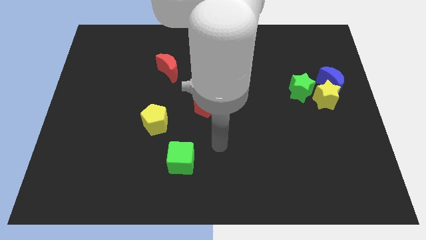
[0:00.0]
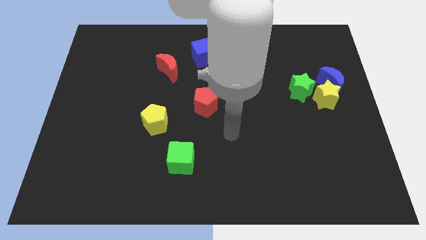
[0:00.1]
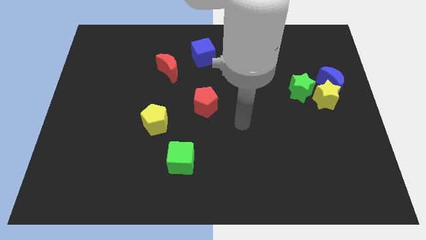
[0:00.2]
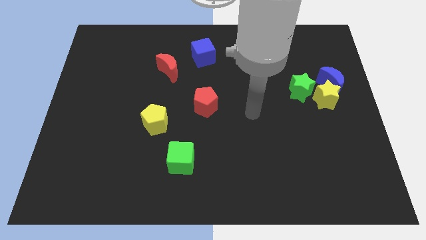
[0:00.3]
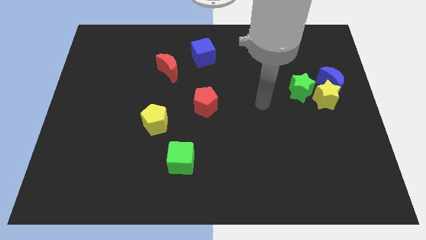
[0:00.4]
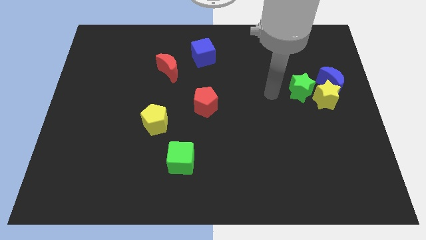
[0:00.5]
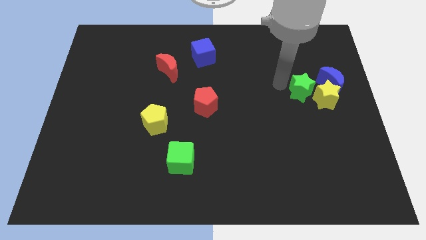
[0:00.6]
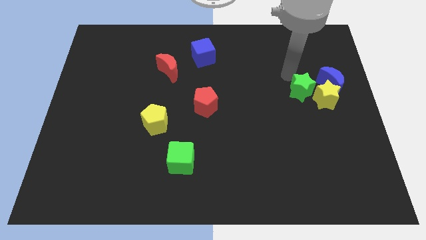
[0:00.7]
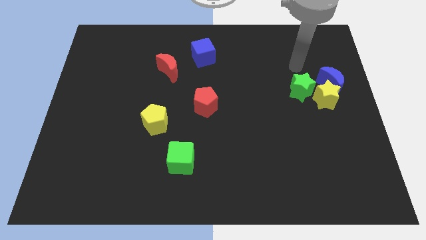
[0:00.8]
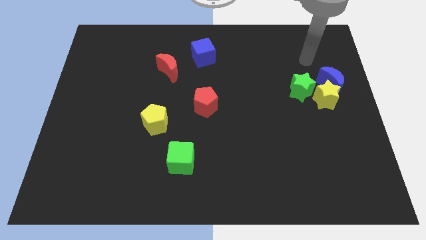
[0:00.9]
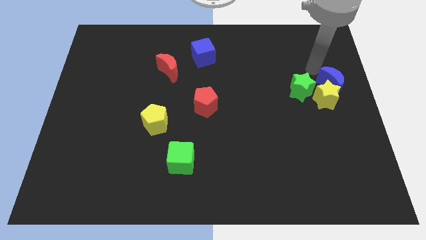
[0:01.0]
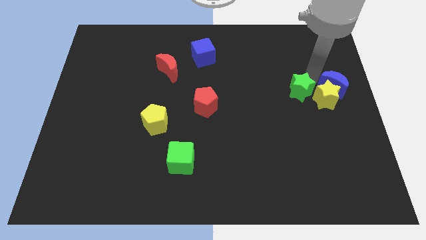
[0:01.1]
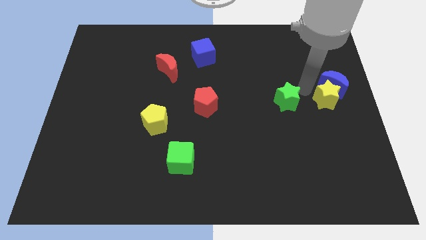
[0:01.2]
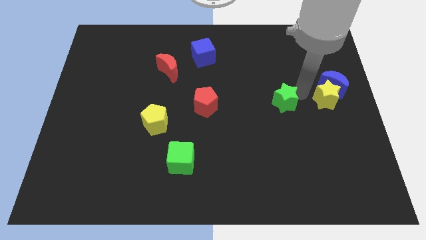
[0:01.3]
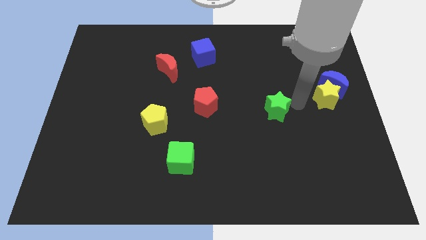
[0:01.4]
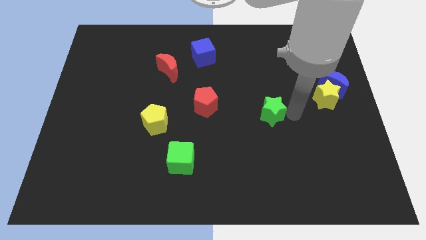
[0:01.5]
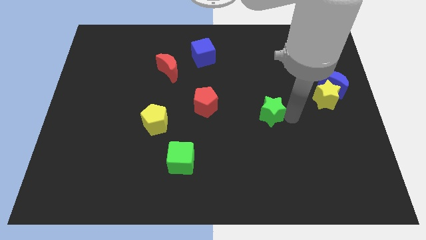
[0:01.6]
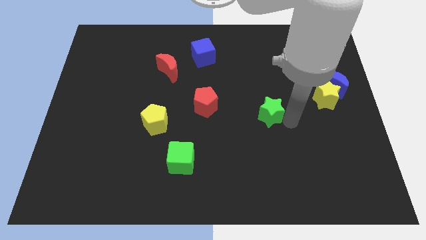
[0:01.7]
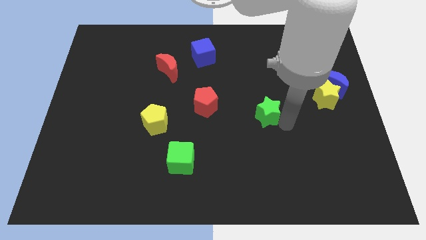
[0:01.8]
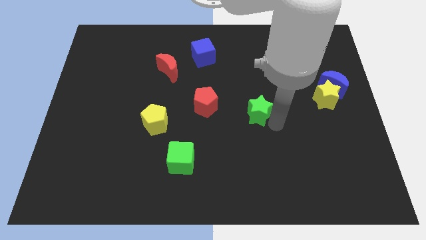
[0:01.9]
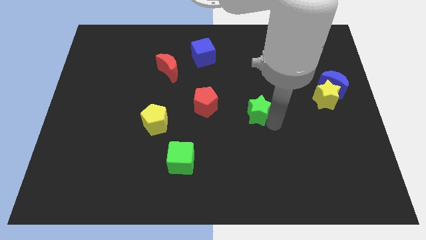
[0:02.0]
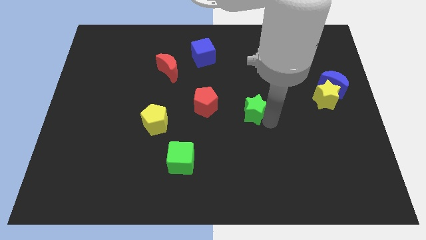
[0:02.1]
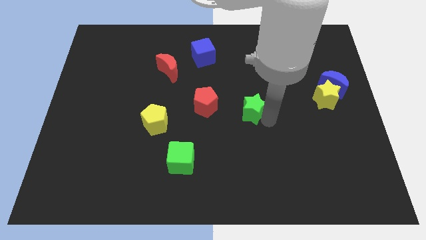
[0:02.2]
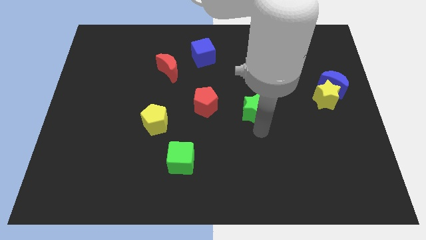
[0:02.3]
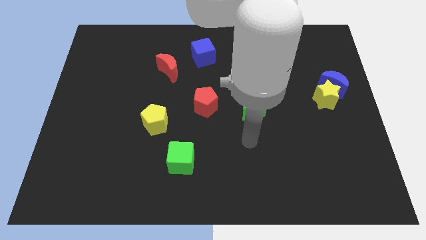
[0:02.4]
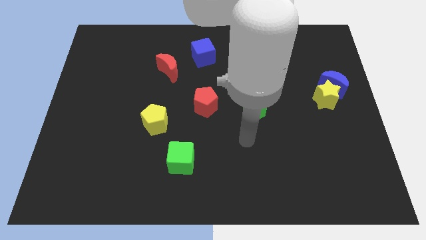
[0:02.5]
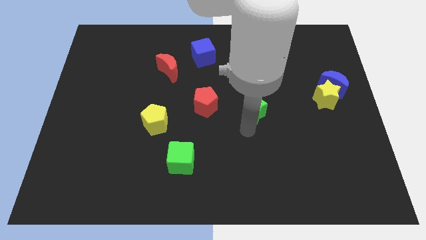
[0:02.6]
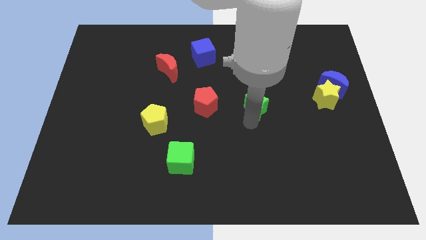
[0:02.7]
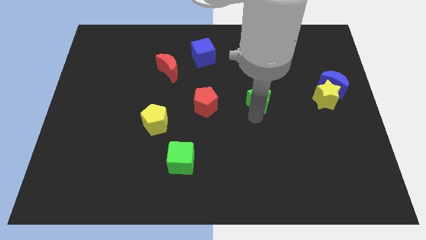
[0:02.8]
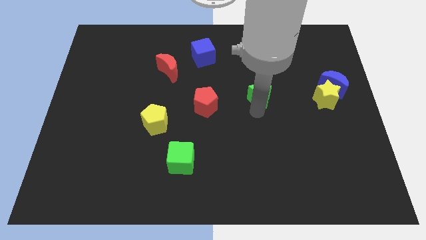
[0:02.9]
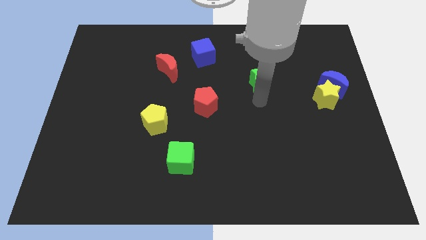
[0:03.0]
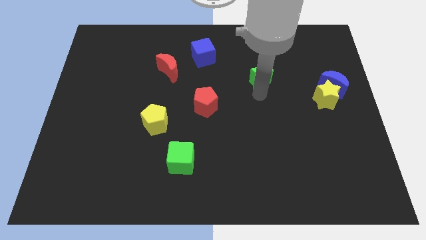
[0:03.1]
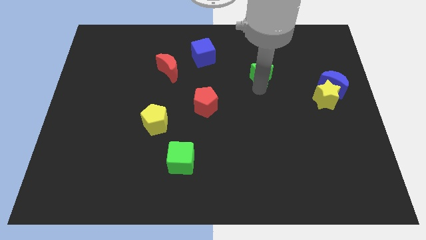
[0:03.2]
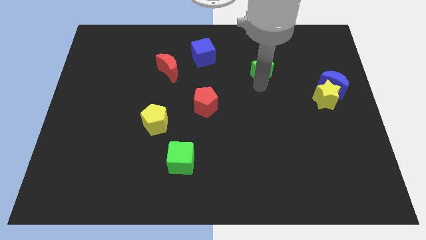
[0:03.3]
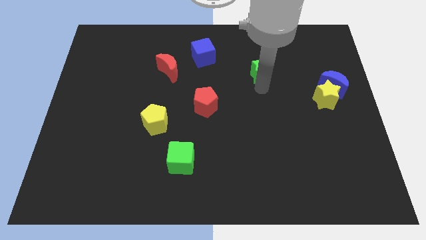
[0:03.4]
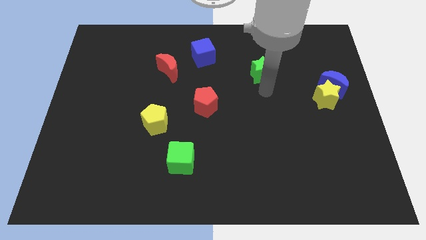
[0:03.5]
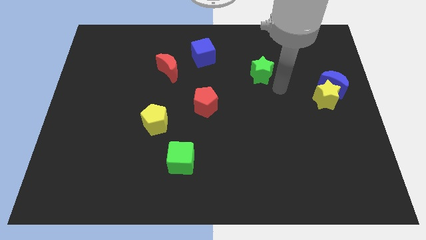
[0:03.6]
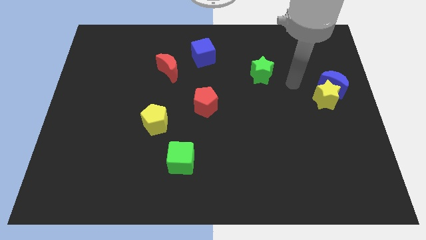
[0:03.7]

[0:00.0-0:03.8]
push the green star to the top of the board

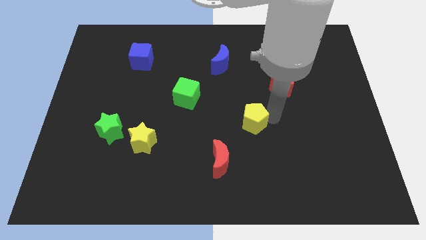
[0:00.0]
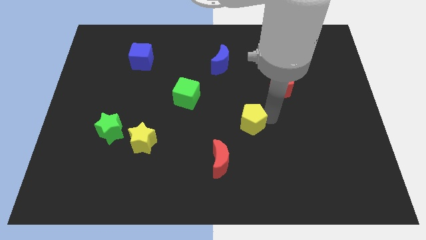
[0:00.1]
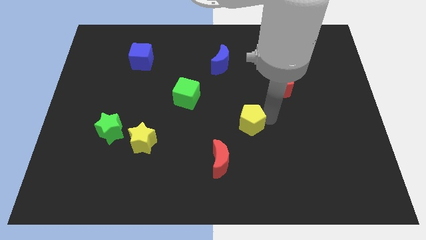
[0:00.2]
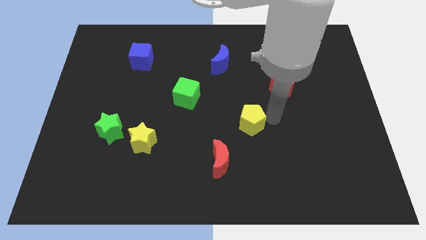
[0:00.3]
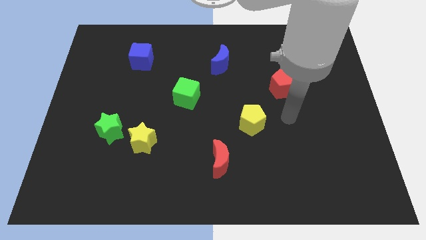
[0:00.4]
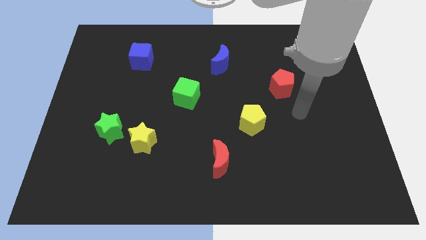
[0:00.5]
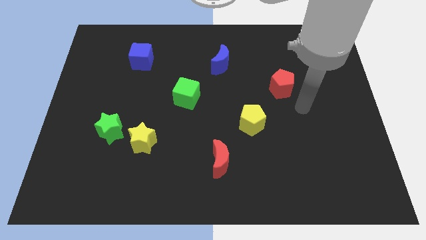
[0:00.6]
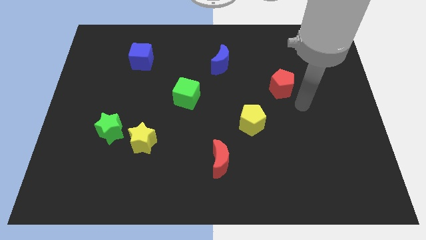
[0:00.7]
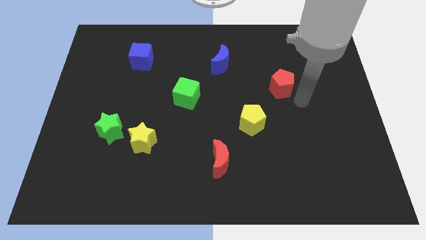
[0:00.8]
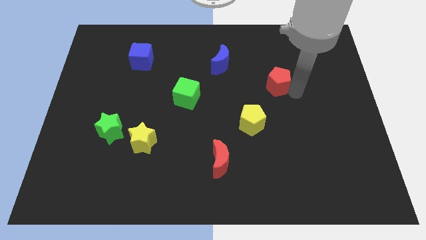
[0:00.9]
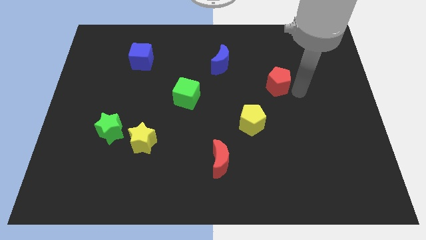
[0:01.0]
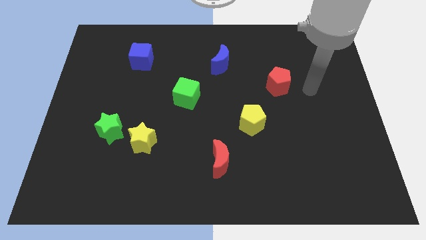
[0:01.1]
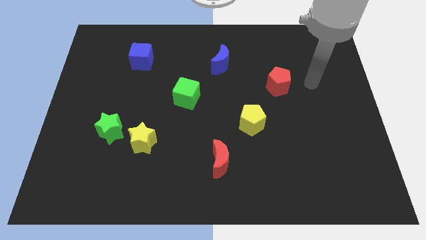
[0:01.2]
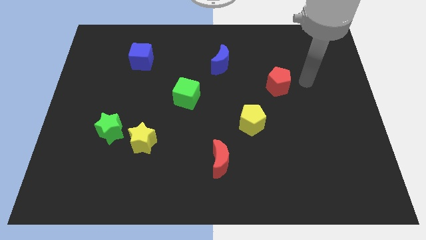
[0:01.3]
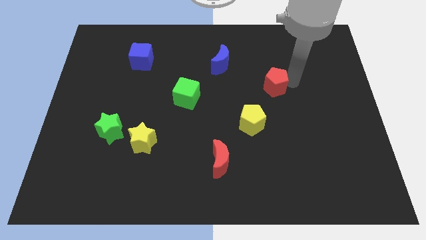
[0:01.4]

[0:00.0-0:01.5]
move red pentagon diagonally right to the yellow pentagon

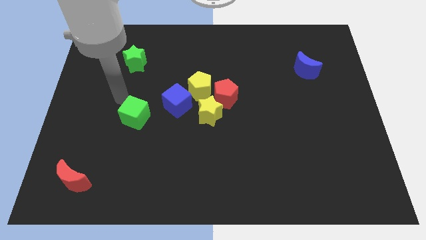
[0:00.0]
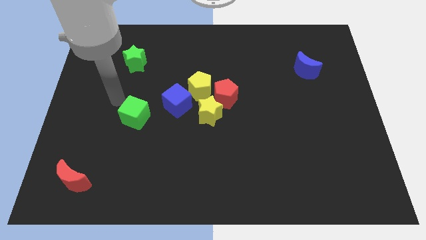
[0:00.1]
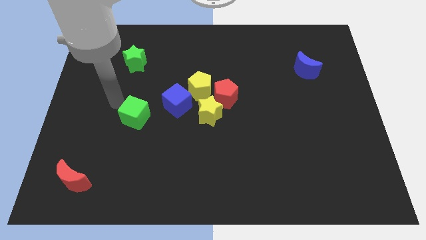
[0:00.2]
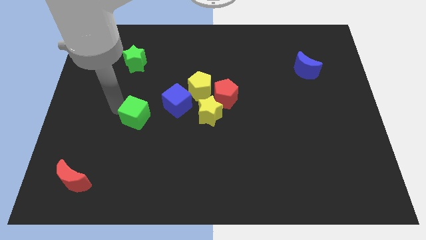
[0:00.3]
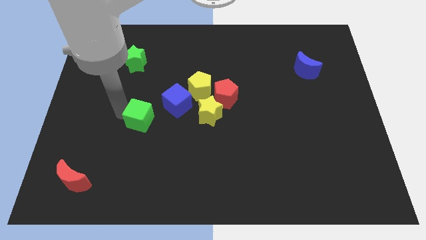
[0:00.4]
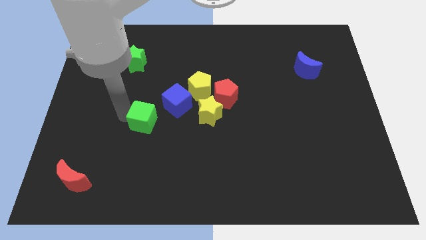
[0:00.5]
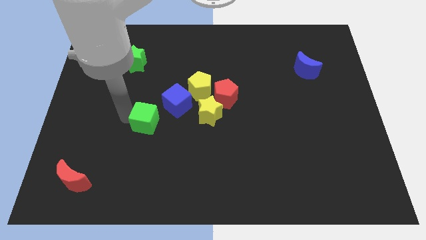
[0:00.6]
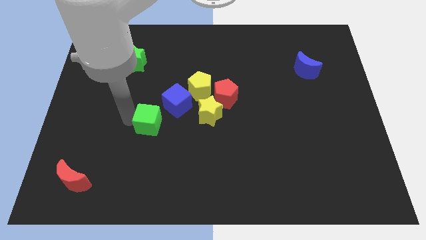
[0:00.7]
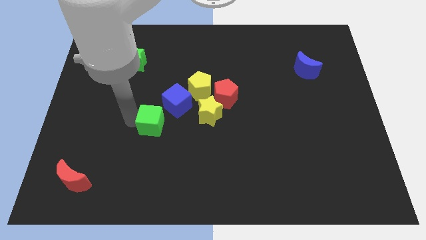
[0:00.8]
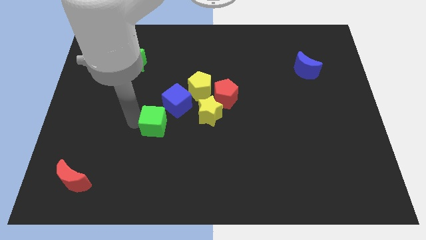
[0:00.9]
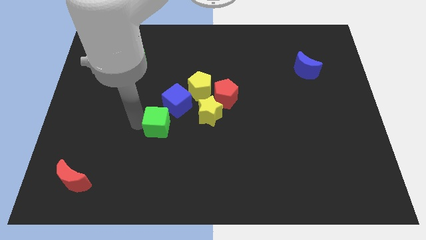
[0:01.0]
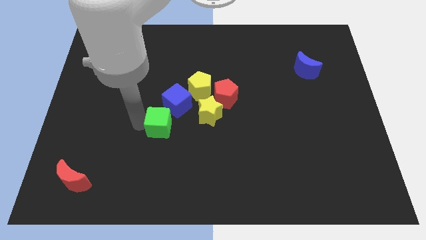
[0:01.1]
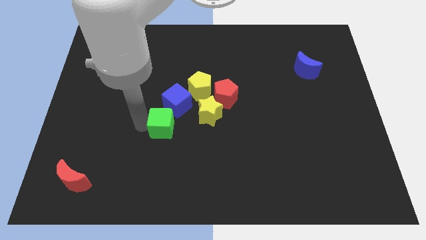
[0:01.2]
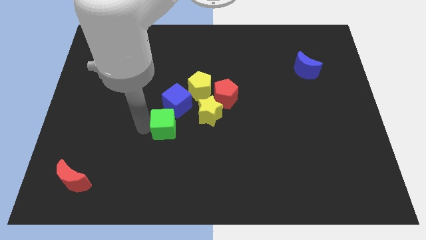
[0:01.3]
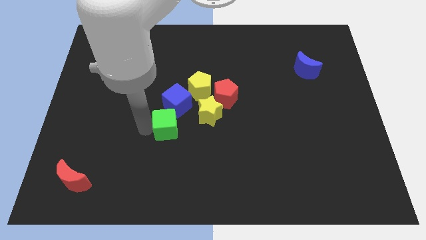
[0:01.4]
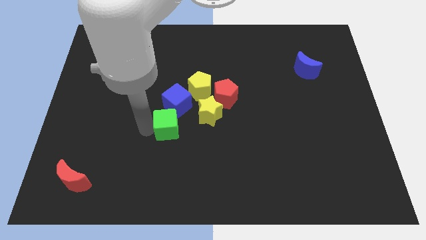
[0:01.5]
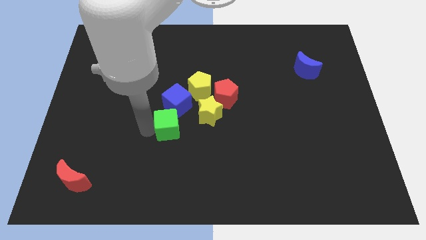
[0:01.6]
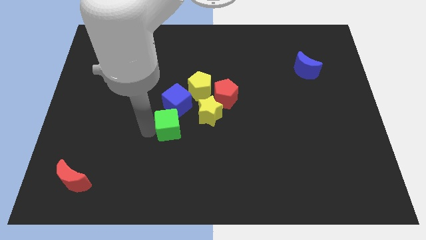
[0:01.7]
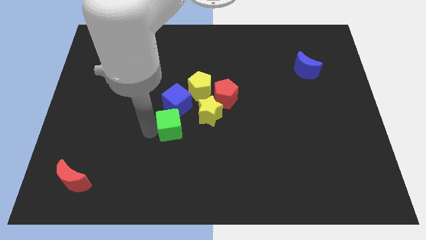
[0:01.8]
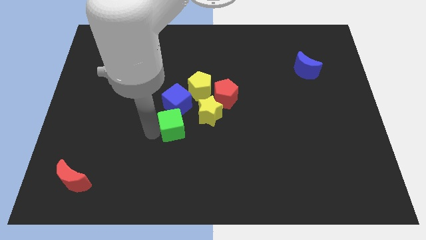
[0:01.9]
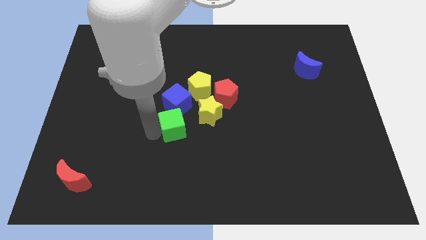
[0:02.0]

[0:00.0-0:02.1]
place the green cube below the blue cube

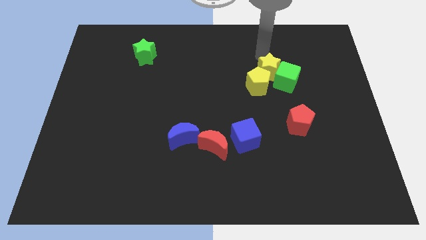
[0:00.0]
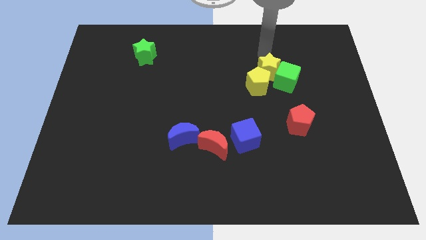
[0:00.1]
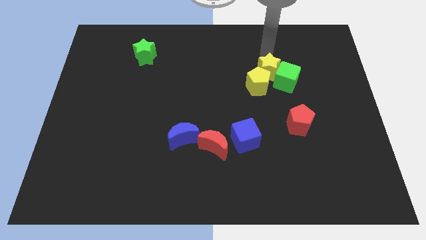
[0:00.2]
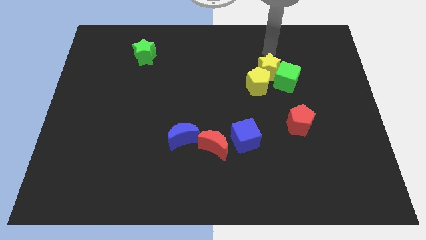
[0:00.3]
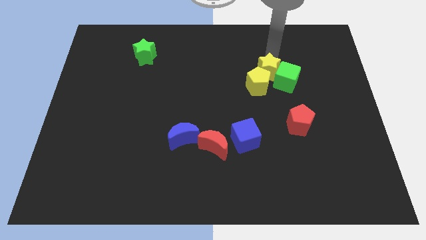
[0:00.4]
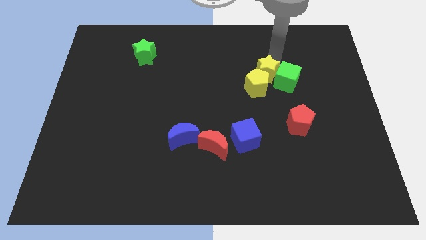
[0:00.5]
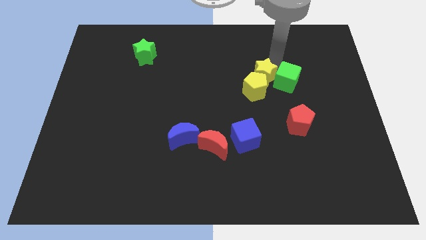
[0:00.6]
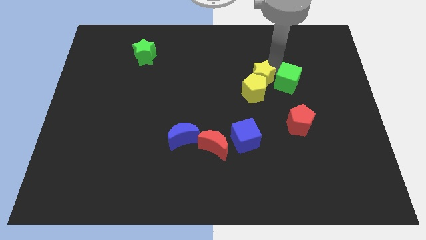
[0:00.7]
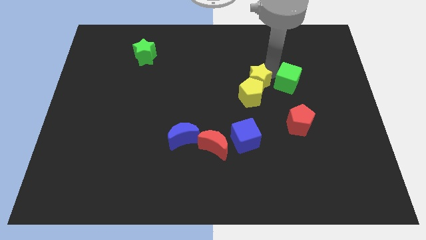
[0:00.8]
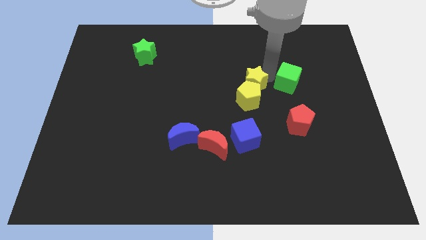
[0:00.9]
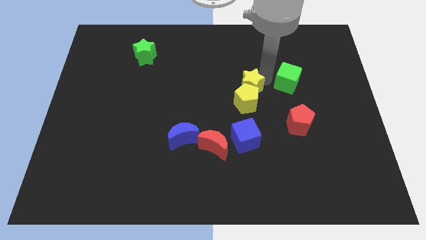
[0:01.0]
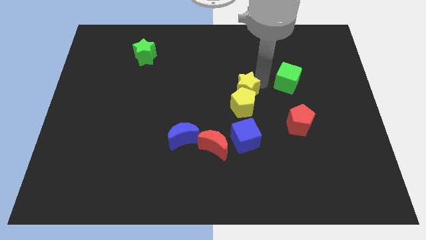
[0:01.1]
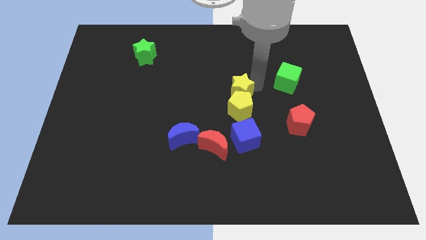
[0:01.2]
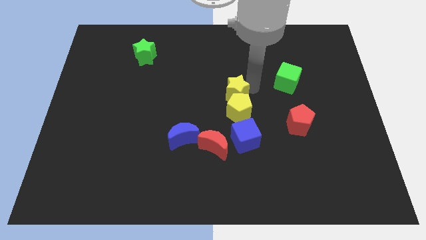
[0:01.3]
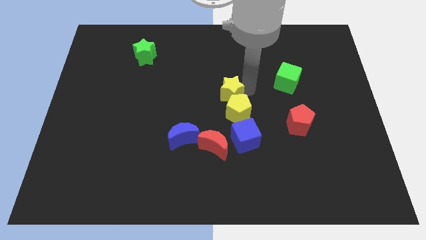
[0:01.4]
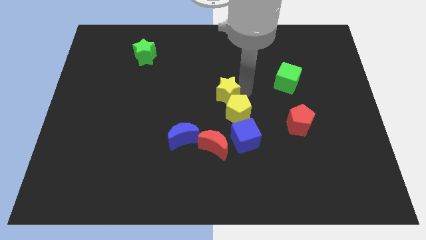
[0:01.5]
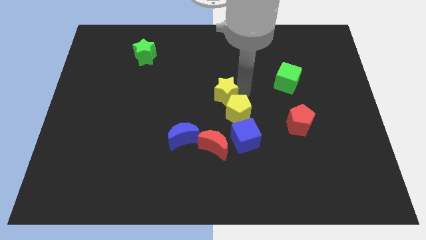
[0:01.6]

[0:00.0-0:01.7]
separate yellow star from green cube
